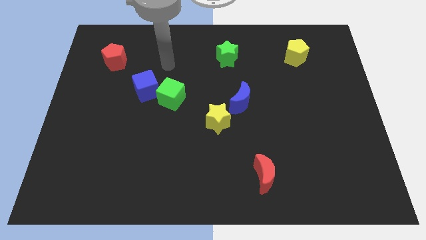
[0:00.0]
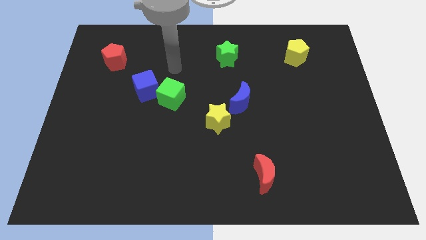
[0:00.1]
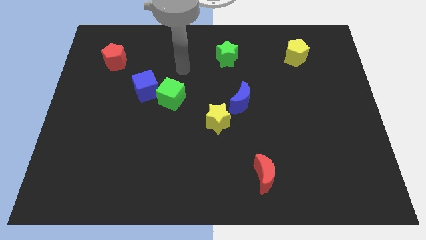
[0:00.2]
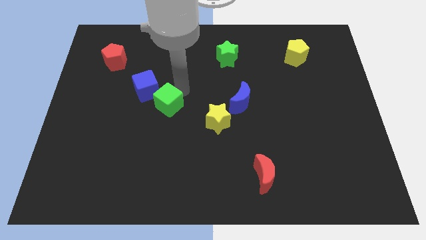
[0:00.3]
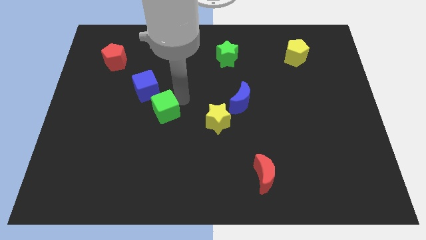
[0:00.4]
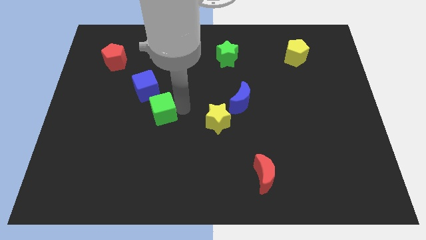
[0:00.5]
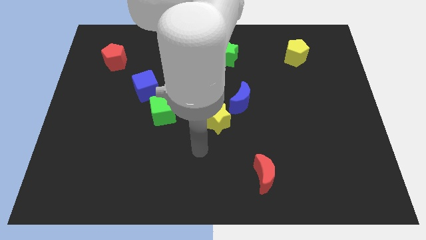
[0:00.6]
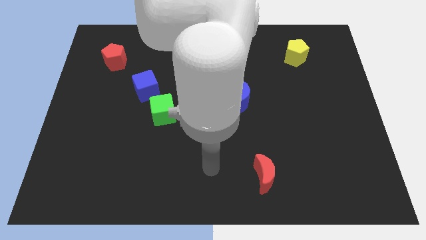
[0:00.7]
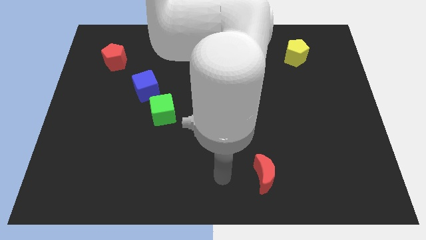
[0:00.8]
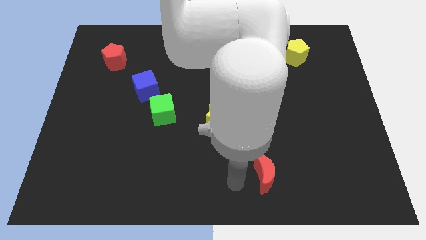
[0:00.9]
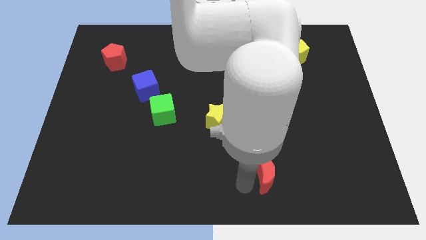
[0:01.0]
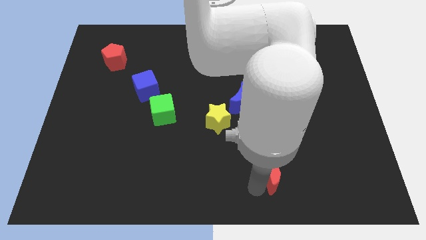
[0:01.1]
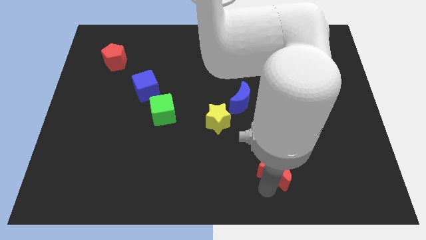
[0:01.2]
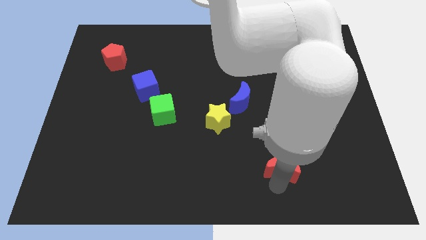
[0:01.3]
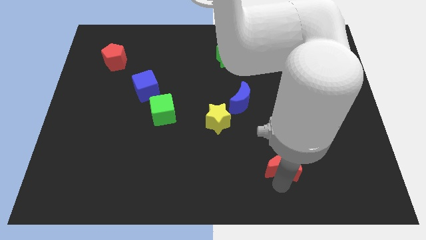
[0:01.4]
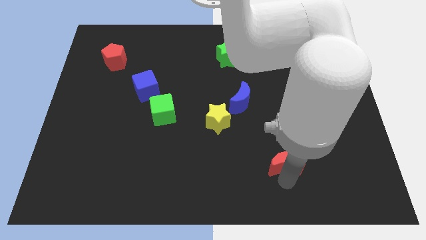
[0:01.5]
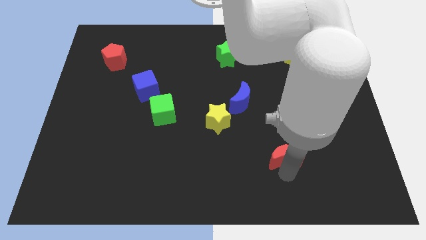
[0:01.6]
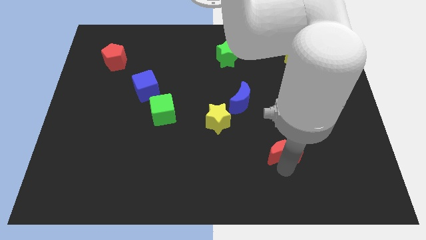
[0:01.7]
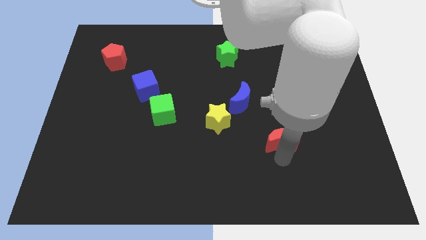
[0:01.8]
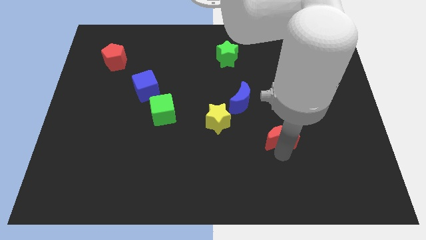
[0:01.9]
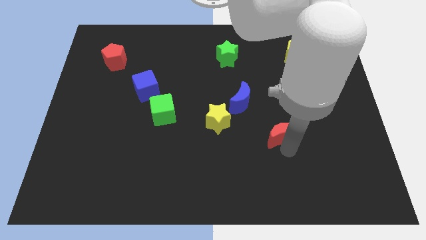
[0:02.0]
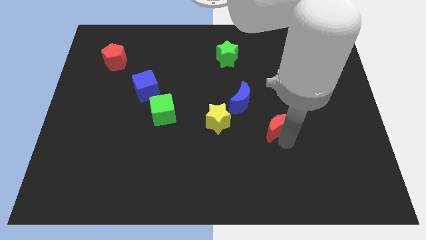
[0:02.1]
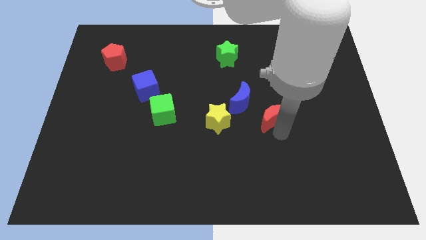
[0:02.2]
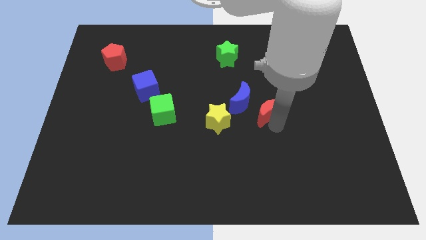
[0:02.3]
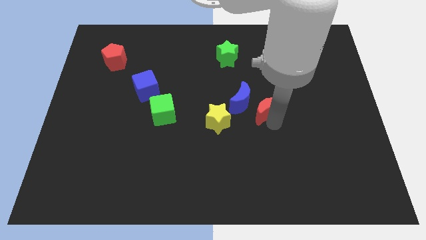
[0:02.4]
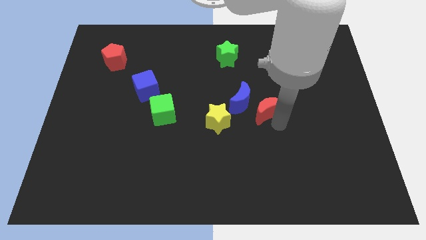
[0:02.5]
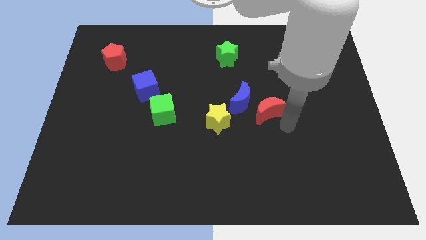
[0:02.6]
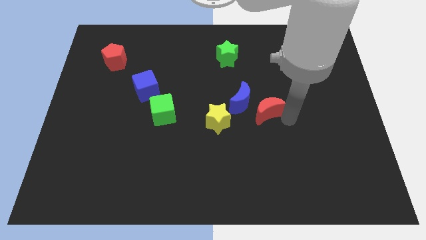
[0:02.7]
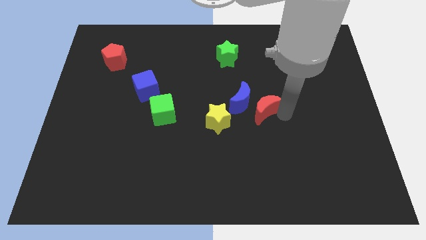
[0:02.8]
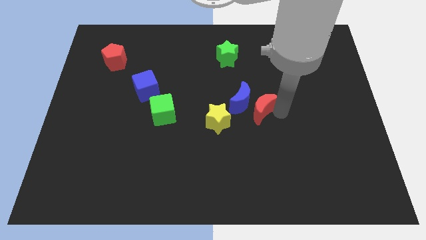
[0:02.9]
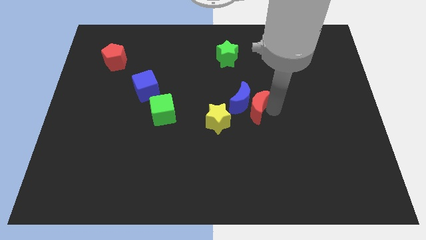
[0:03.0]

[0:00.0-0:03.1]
push the red moon to the blue moon

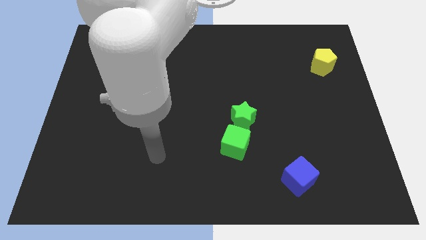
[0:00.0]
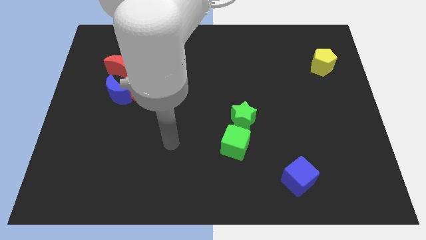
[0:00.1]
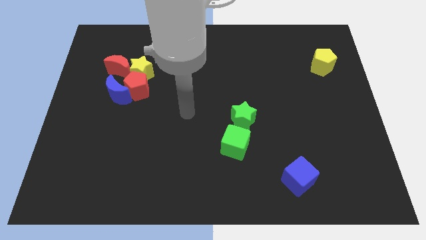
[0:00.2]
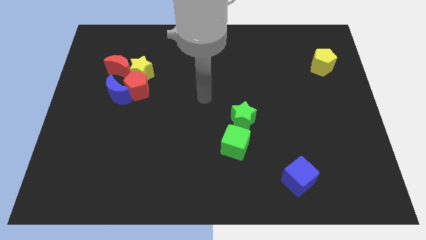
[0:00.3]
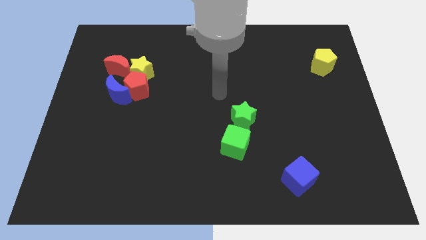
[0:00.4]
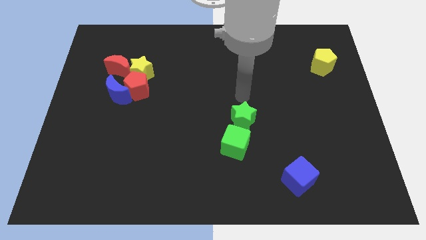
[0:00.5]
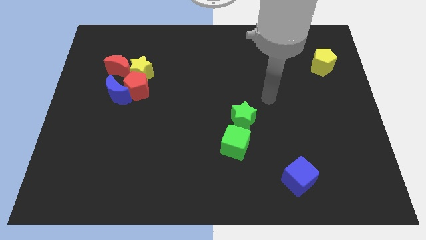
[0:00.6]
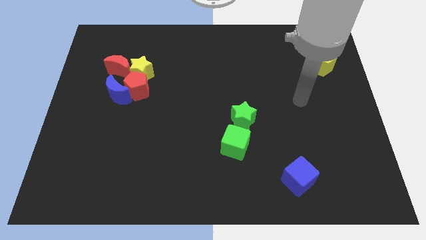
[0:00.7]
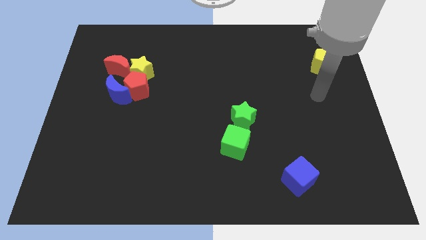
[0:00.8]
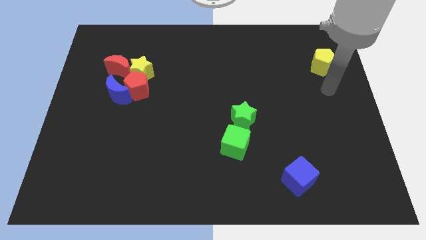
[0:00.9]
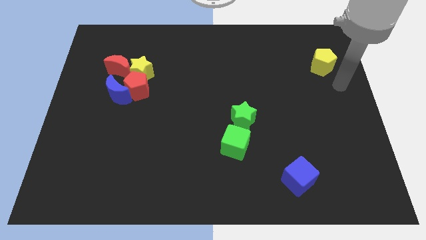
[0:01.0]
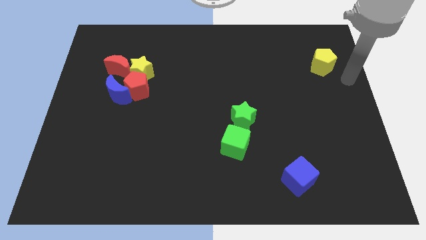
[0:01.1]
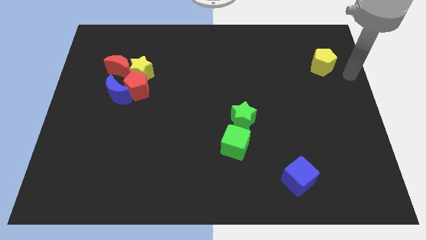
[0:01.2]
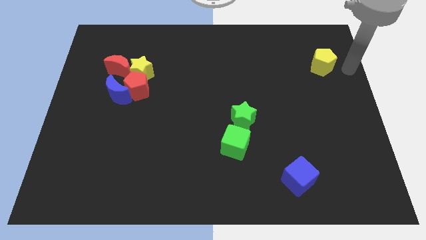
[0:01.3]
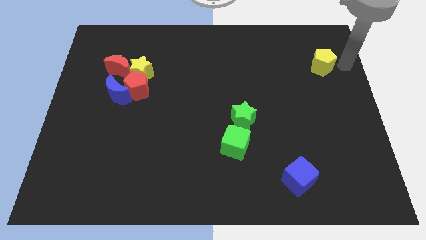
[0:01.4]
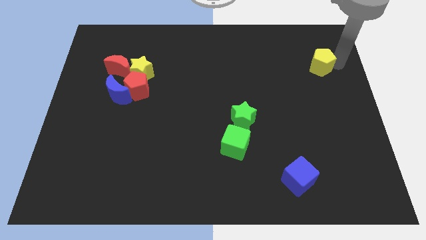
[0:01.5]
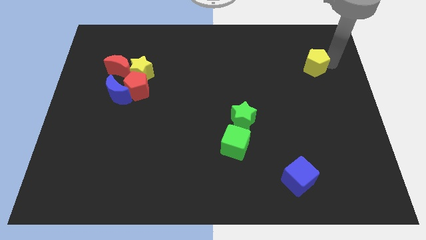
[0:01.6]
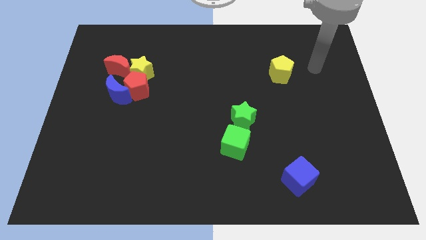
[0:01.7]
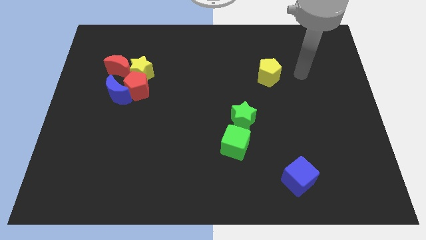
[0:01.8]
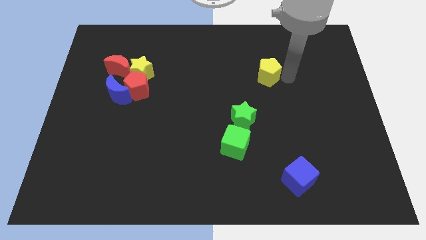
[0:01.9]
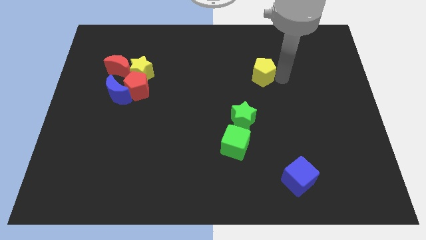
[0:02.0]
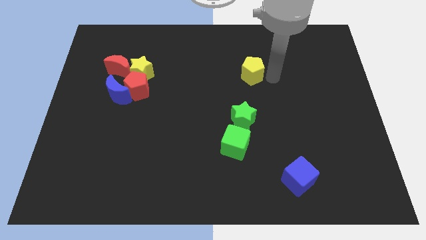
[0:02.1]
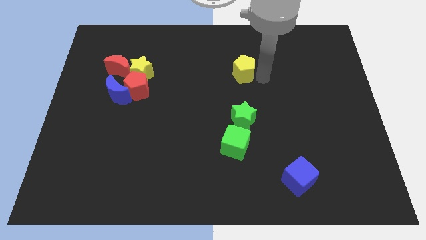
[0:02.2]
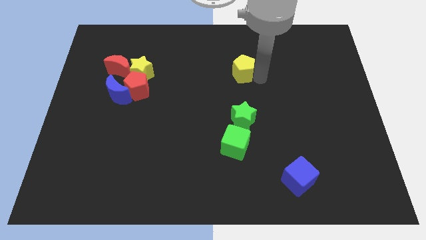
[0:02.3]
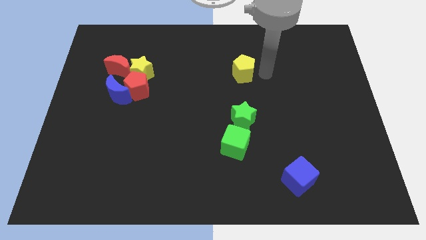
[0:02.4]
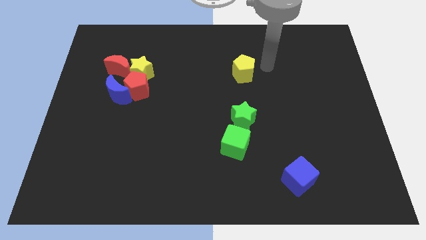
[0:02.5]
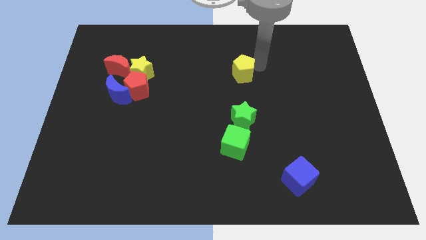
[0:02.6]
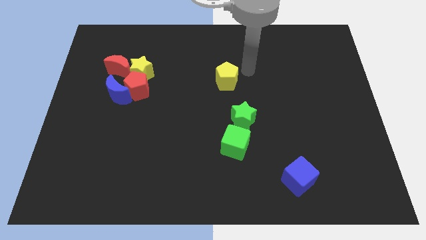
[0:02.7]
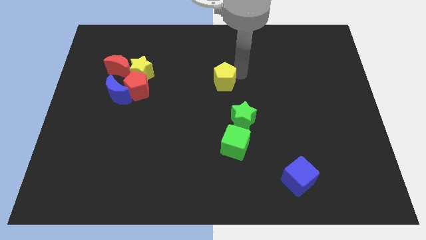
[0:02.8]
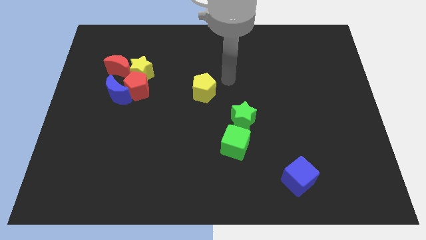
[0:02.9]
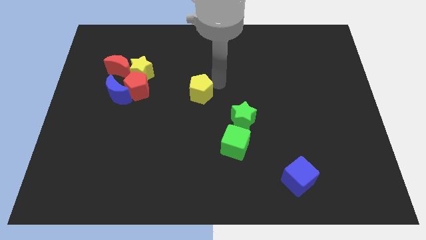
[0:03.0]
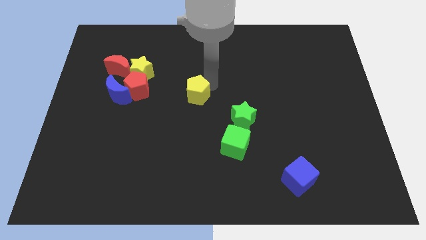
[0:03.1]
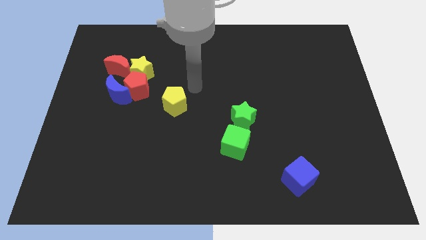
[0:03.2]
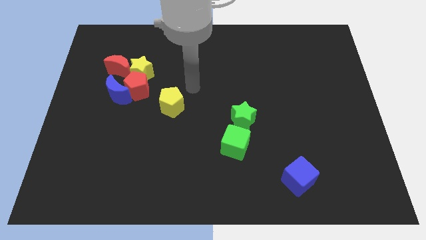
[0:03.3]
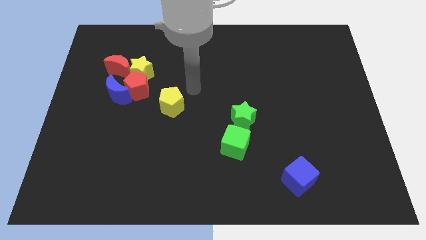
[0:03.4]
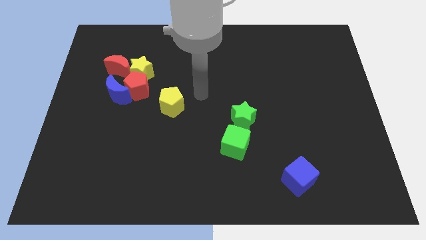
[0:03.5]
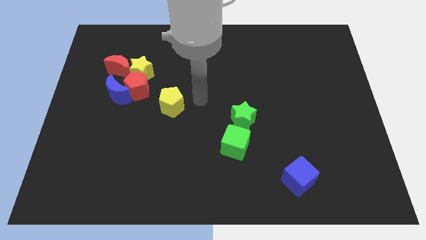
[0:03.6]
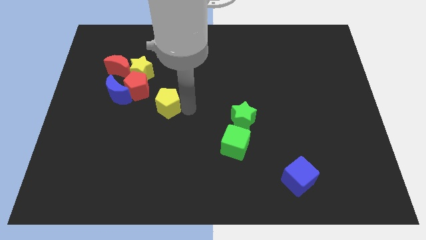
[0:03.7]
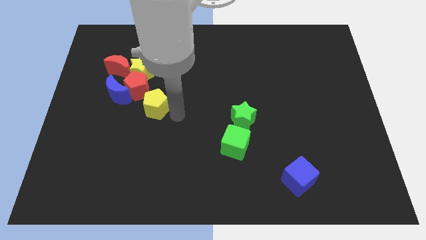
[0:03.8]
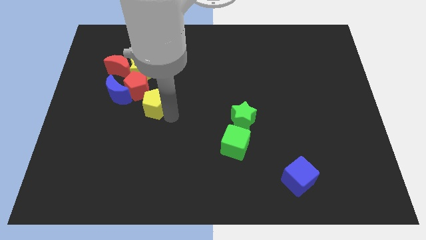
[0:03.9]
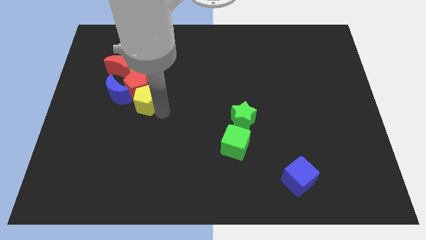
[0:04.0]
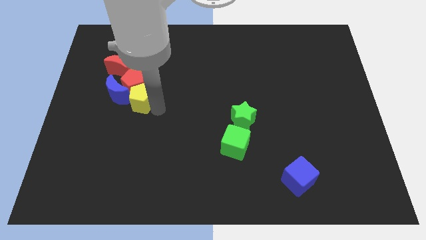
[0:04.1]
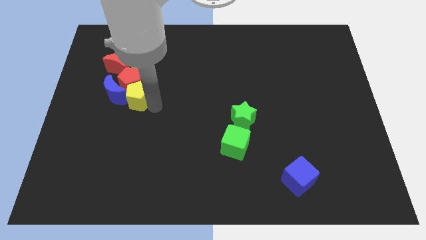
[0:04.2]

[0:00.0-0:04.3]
put the yellow pentagon next to the red pentagon

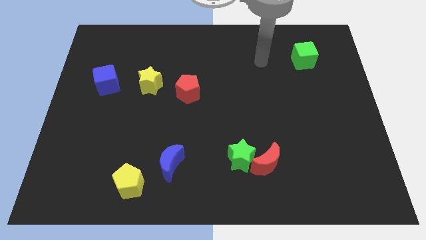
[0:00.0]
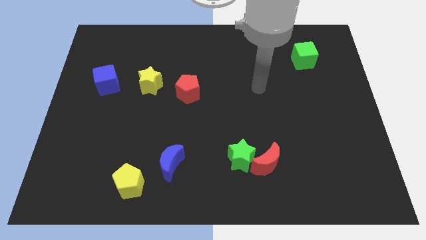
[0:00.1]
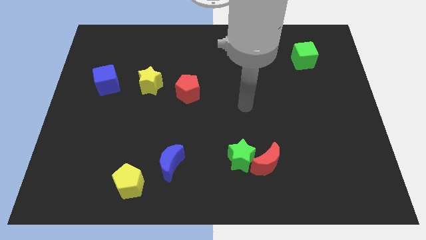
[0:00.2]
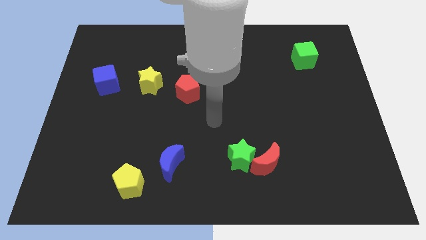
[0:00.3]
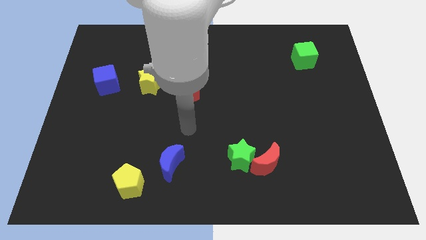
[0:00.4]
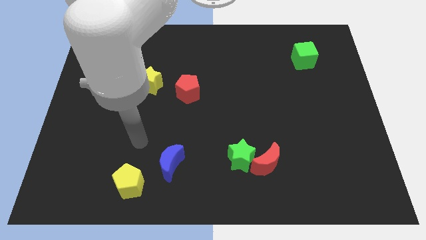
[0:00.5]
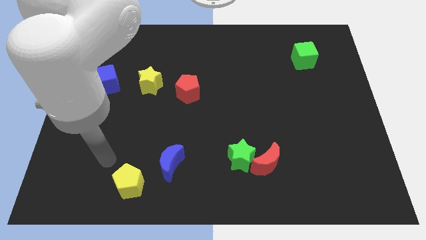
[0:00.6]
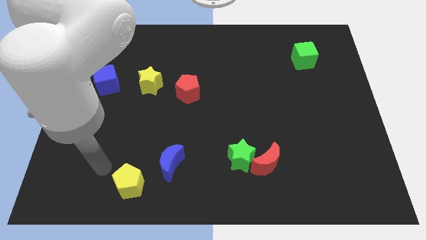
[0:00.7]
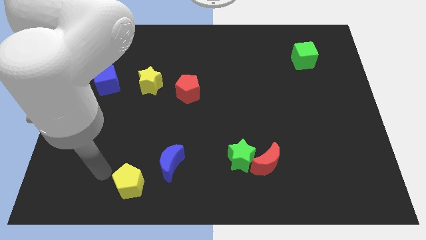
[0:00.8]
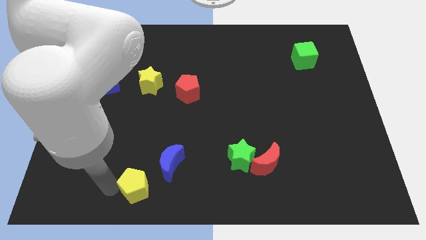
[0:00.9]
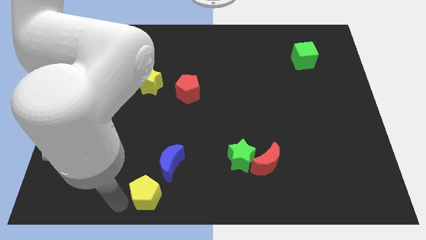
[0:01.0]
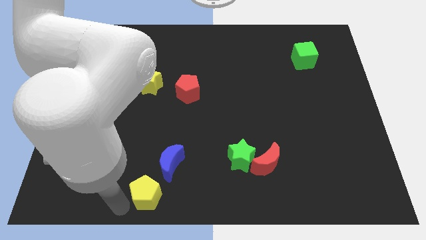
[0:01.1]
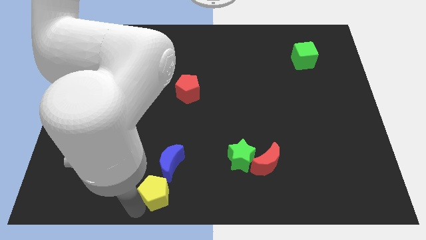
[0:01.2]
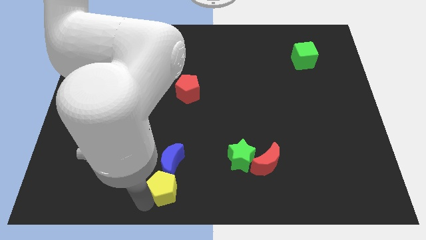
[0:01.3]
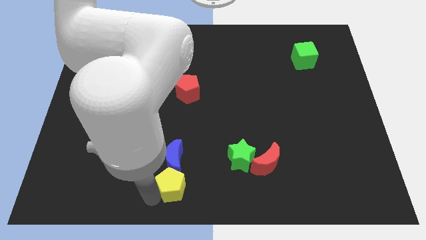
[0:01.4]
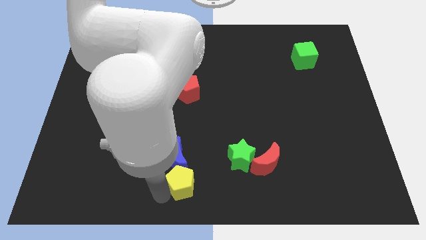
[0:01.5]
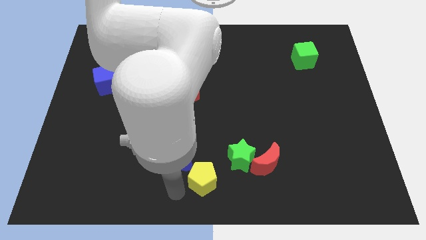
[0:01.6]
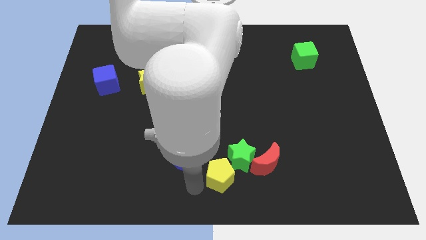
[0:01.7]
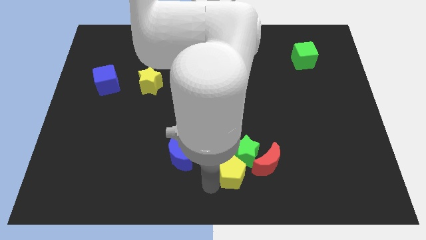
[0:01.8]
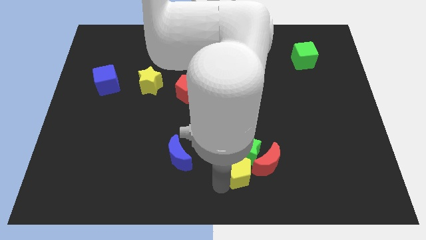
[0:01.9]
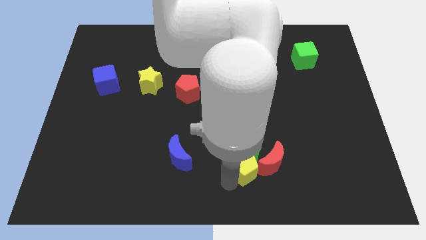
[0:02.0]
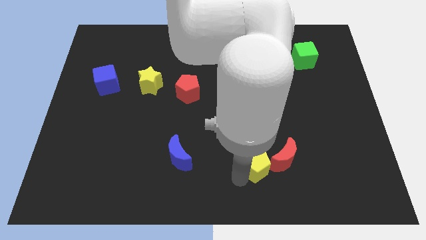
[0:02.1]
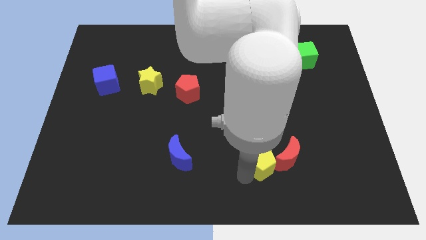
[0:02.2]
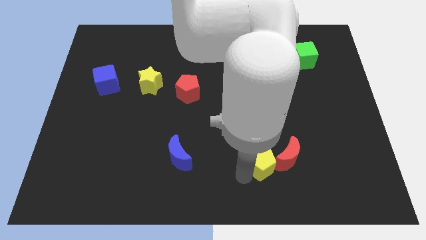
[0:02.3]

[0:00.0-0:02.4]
push the yellow pentagon next to the red moon
